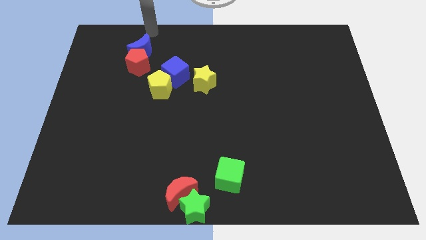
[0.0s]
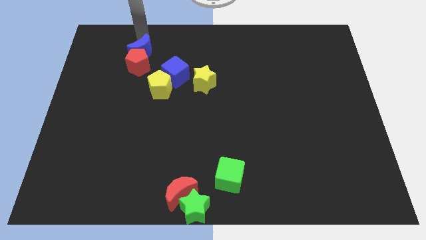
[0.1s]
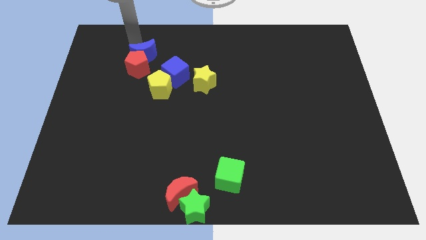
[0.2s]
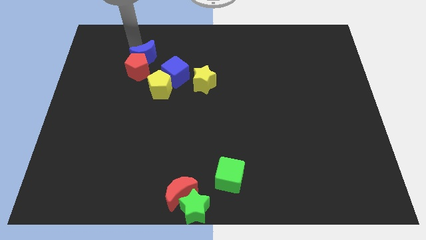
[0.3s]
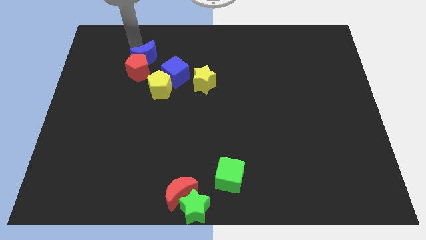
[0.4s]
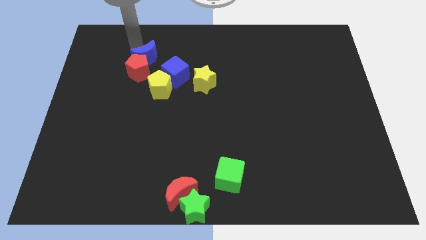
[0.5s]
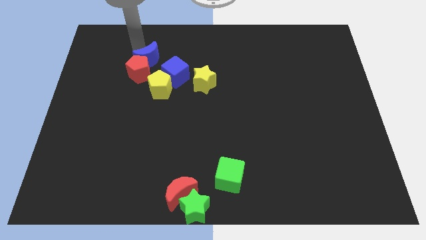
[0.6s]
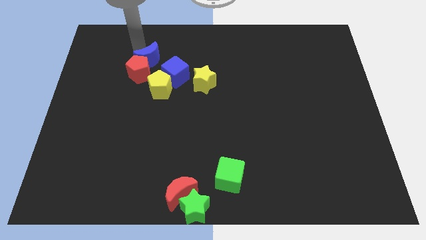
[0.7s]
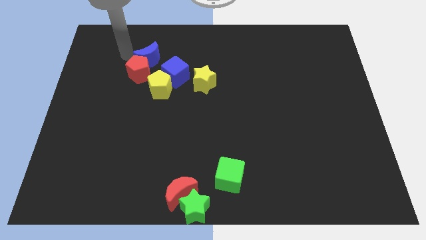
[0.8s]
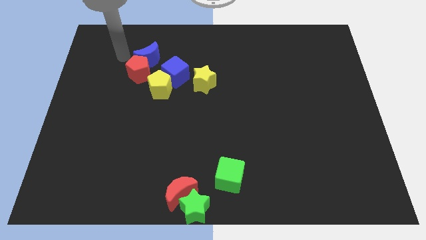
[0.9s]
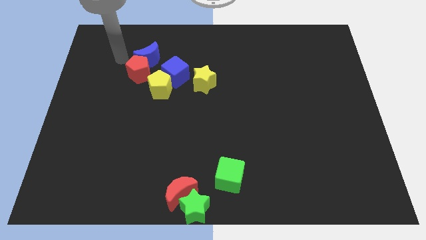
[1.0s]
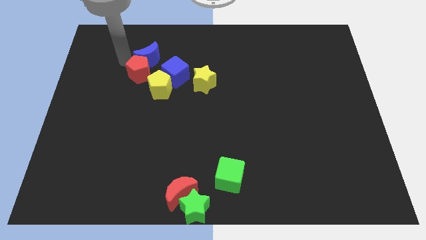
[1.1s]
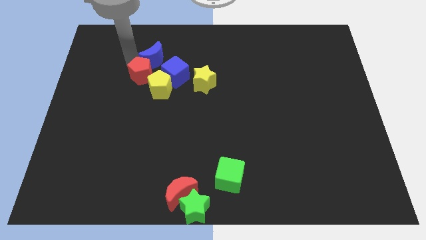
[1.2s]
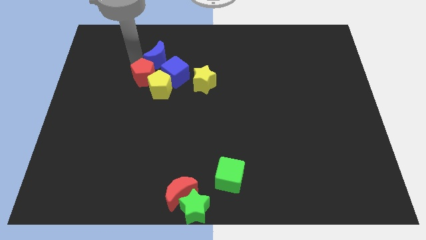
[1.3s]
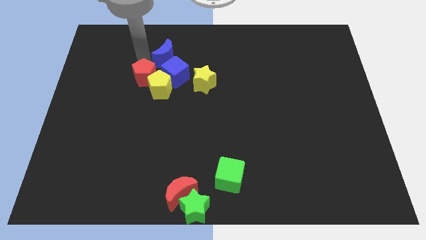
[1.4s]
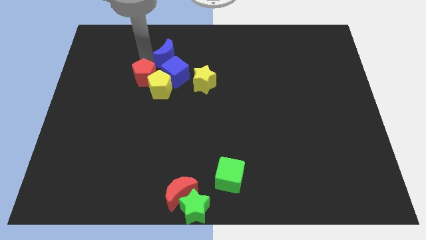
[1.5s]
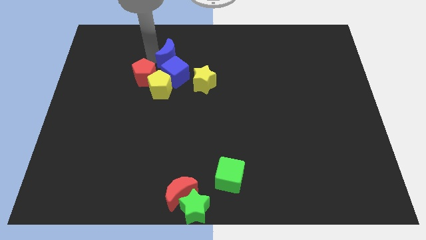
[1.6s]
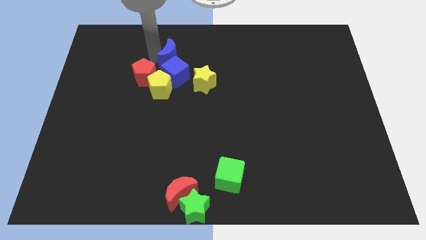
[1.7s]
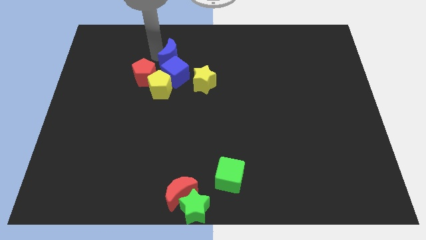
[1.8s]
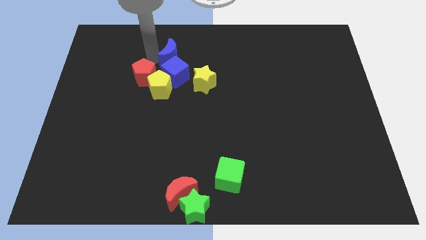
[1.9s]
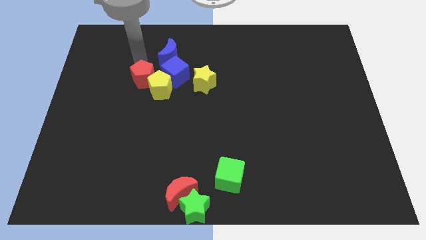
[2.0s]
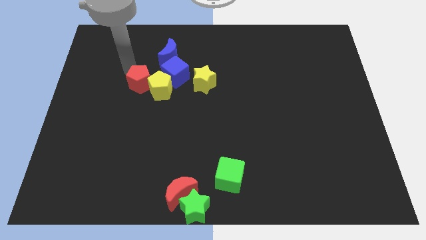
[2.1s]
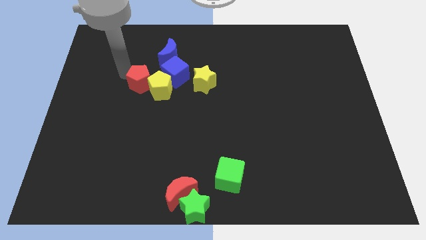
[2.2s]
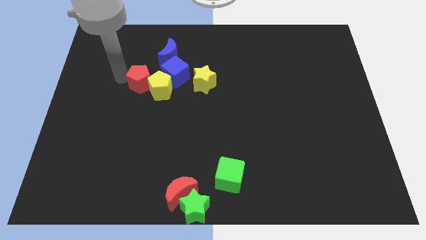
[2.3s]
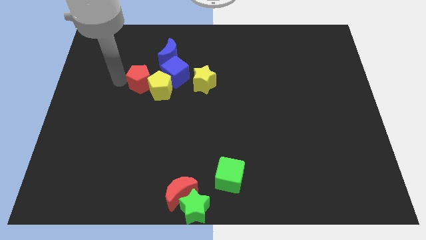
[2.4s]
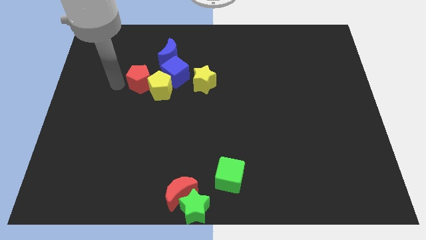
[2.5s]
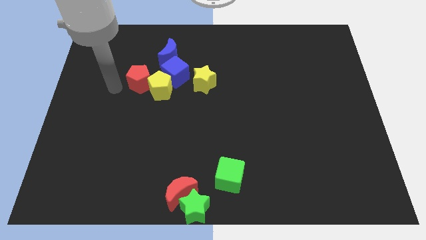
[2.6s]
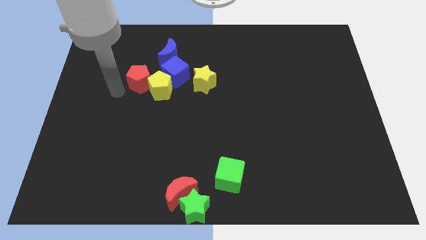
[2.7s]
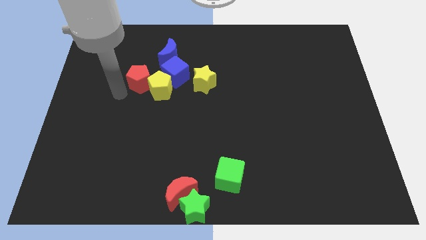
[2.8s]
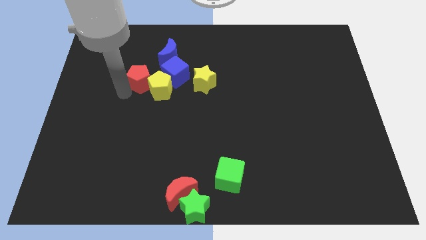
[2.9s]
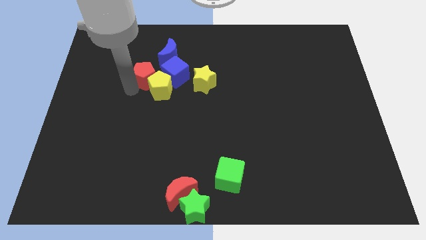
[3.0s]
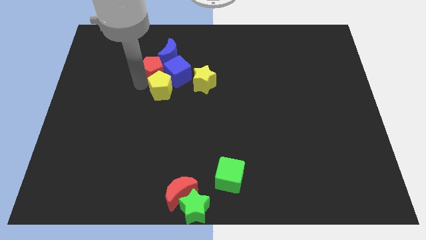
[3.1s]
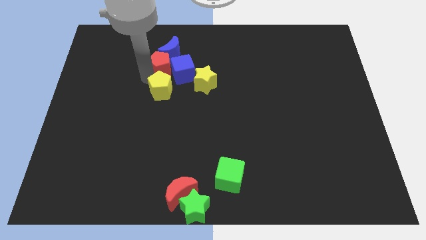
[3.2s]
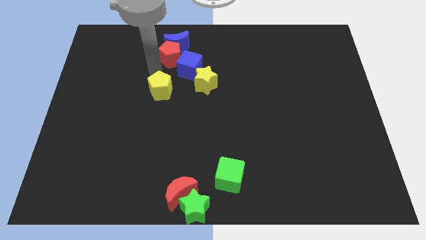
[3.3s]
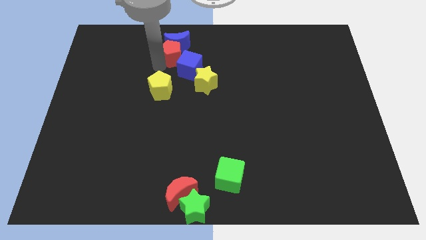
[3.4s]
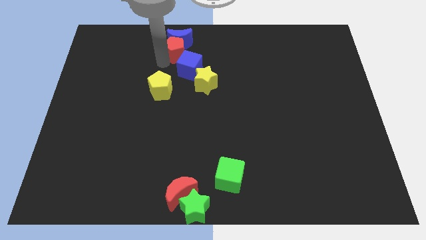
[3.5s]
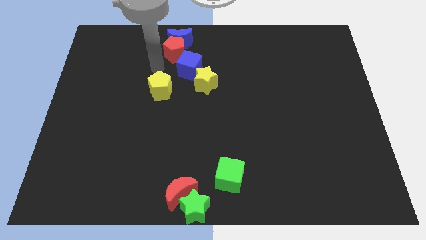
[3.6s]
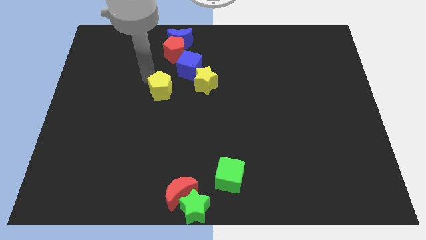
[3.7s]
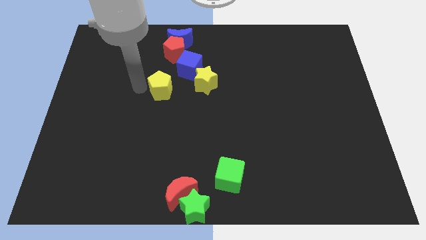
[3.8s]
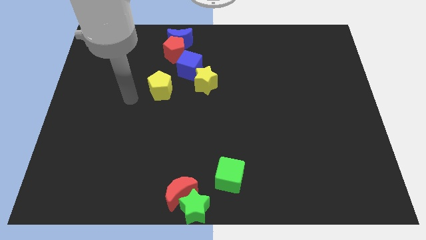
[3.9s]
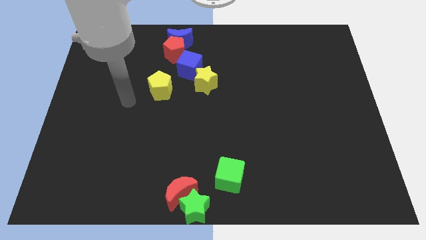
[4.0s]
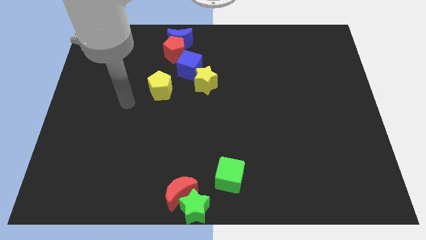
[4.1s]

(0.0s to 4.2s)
move the red pentagon along with the blue crescent towards the top center

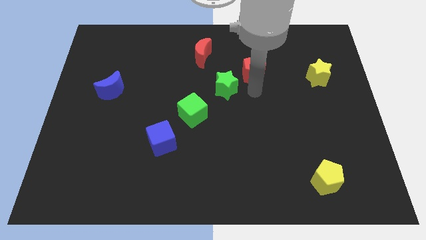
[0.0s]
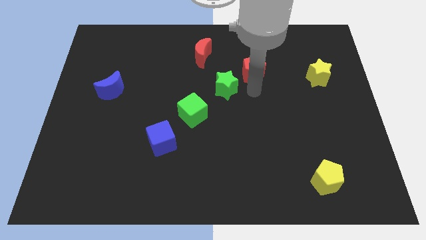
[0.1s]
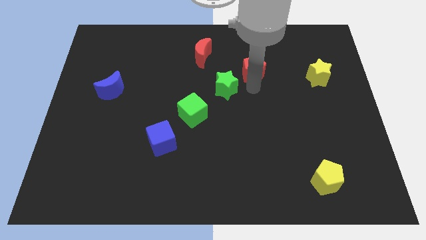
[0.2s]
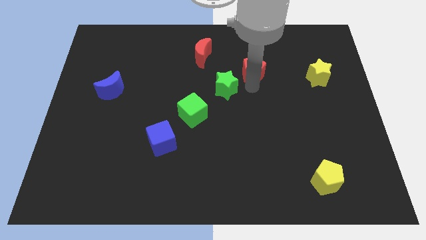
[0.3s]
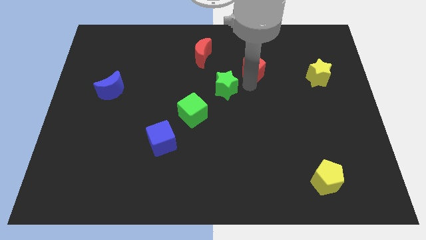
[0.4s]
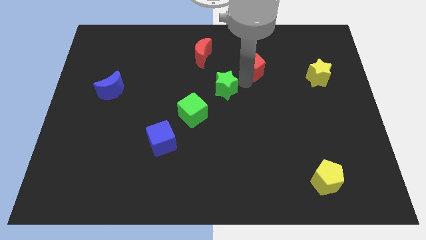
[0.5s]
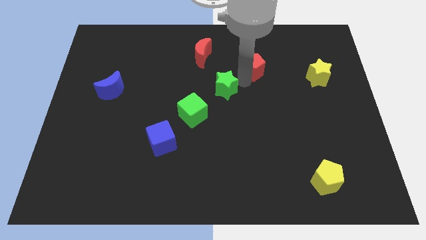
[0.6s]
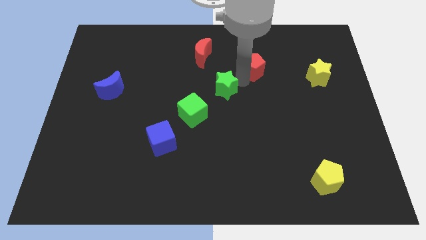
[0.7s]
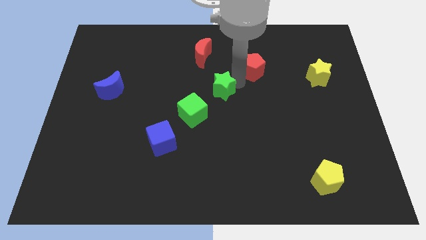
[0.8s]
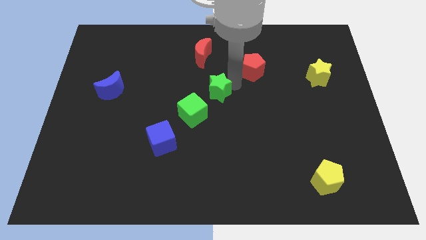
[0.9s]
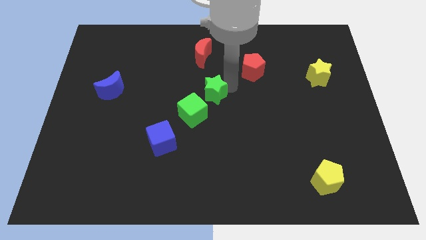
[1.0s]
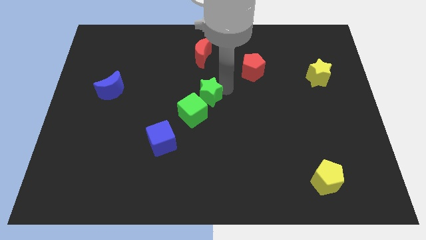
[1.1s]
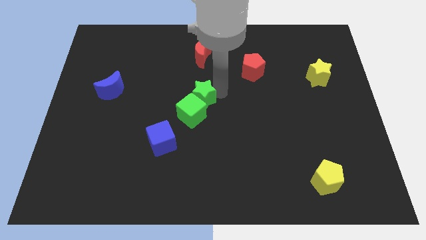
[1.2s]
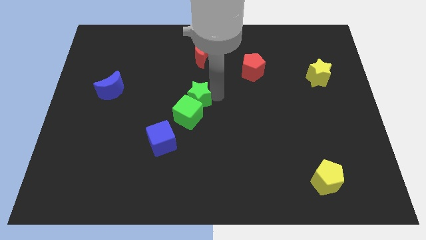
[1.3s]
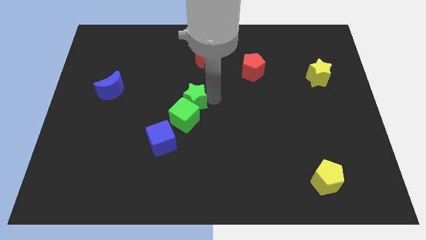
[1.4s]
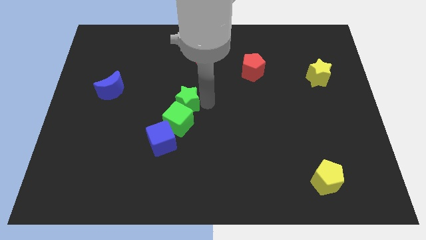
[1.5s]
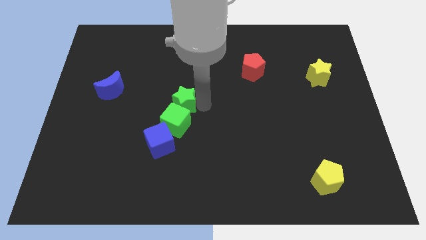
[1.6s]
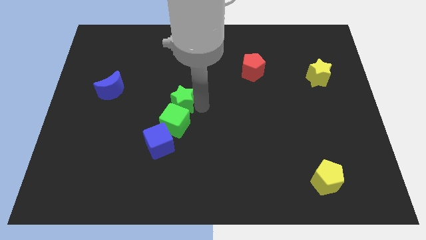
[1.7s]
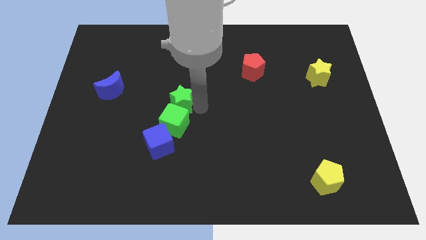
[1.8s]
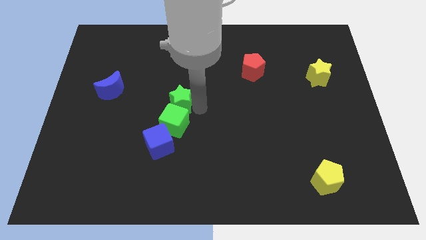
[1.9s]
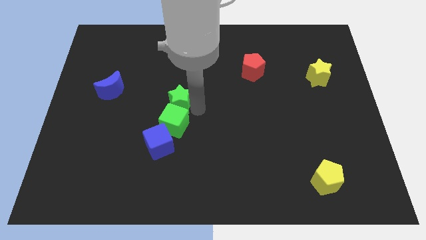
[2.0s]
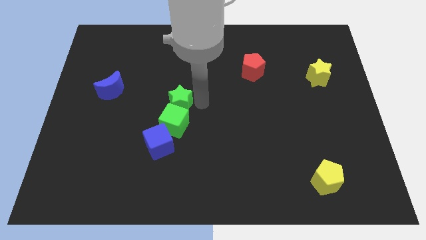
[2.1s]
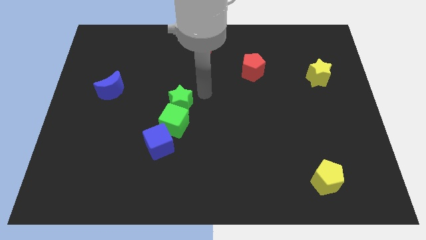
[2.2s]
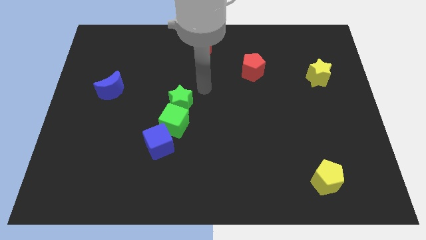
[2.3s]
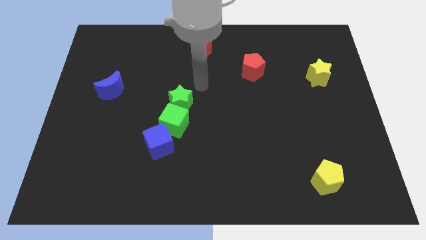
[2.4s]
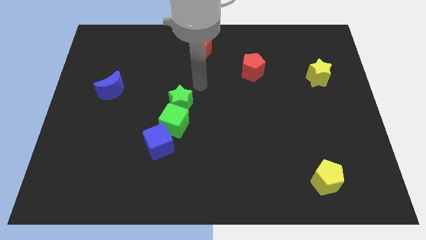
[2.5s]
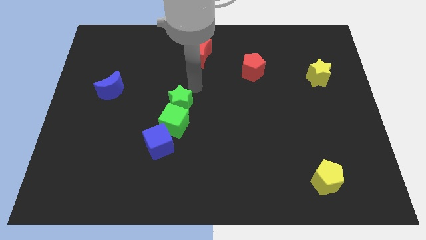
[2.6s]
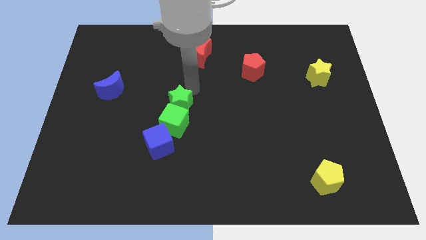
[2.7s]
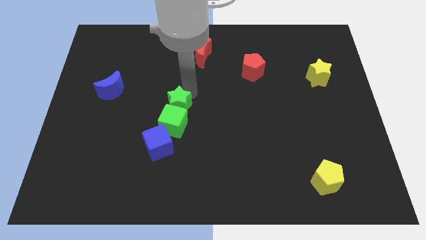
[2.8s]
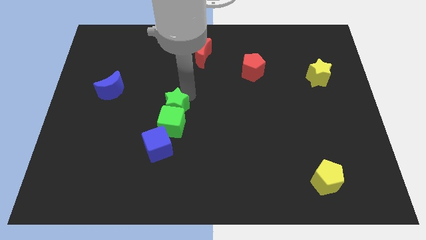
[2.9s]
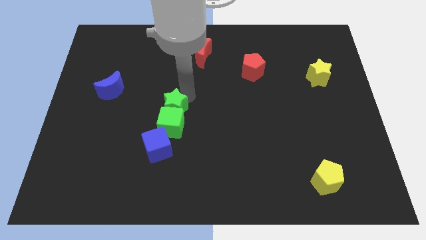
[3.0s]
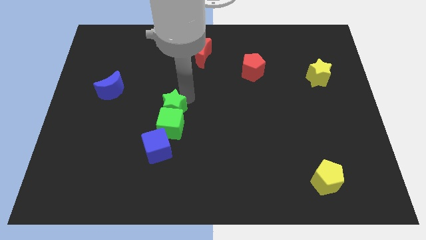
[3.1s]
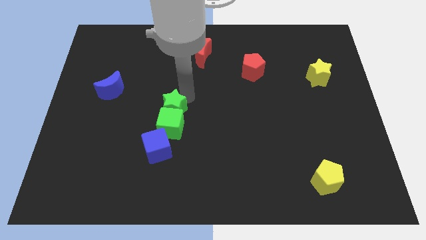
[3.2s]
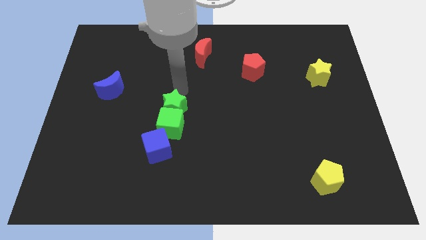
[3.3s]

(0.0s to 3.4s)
push the green blocks and blue cube towards the bottom side of the board

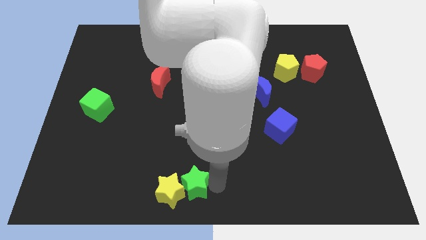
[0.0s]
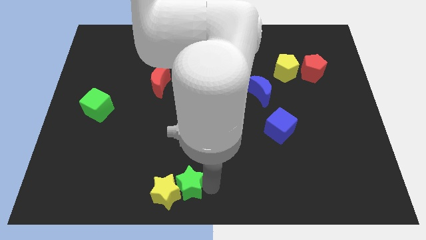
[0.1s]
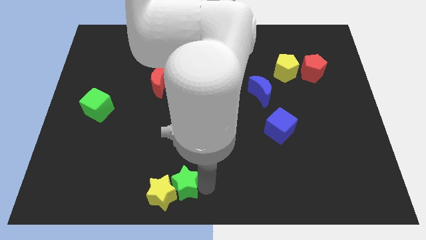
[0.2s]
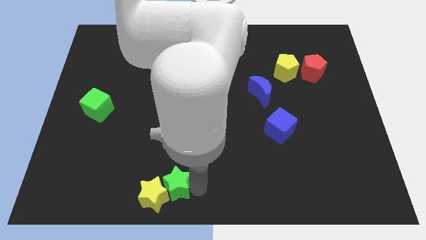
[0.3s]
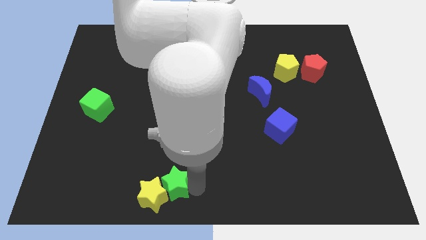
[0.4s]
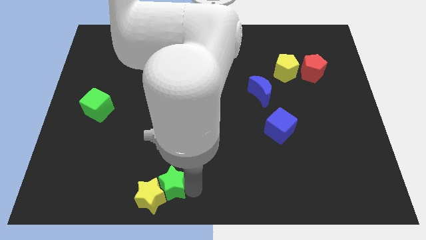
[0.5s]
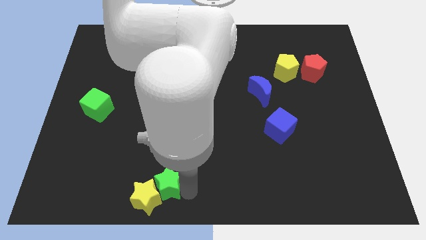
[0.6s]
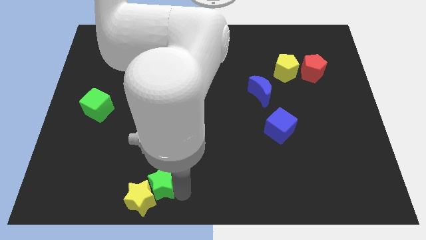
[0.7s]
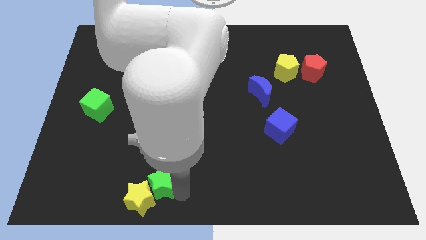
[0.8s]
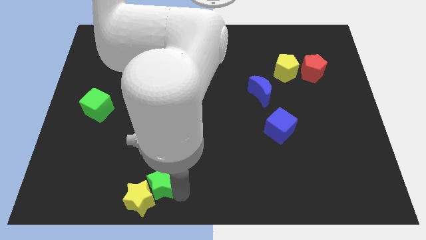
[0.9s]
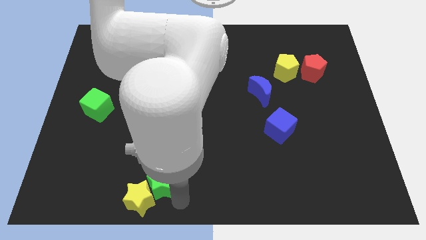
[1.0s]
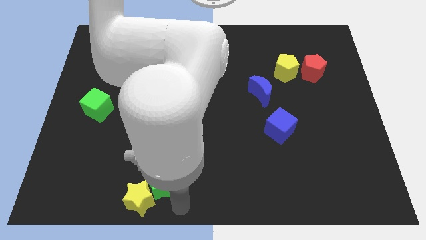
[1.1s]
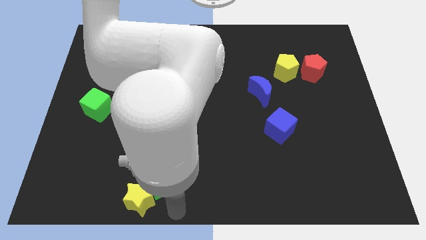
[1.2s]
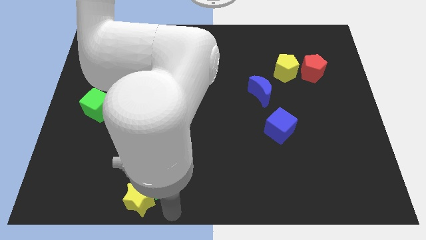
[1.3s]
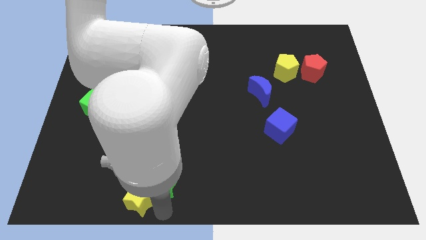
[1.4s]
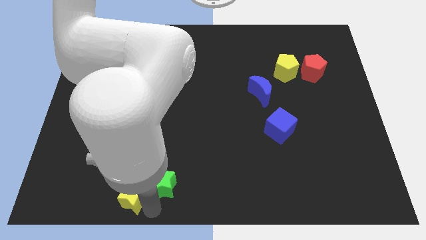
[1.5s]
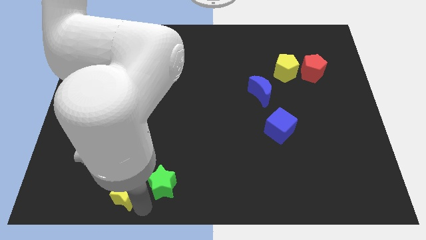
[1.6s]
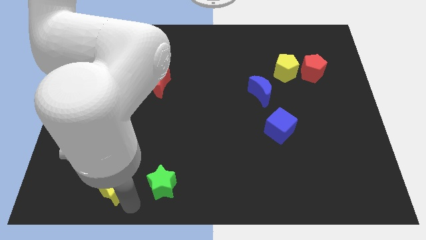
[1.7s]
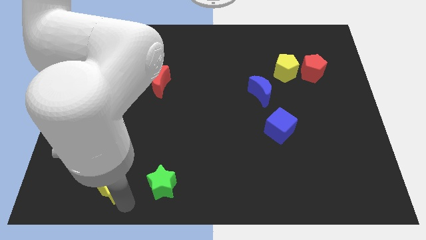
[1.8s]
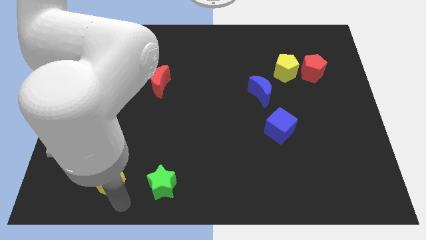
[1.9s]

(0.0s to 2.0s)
separate yellow star from the green star
